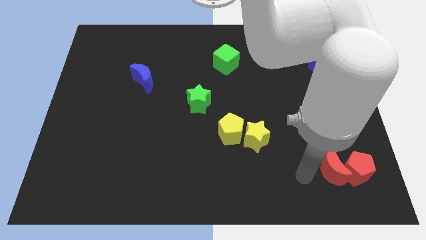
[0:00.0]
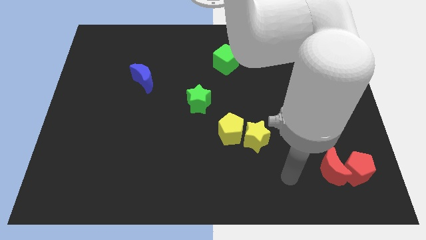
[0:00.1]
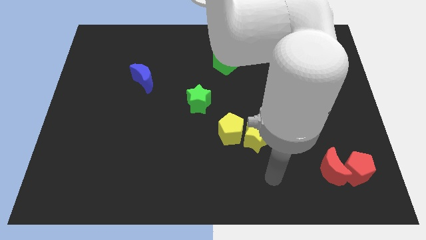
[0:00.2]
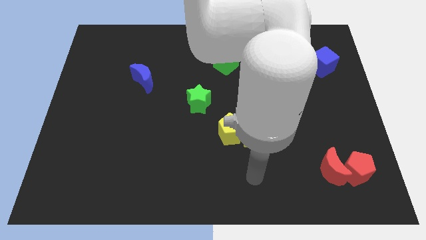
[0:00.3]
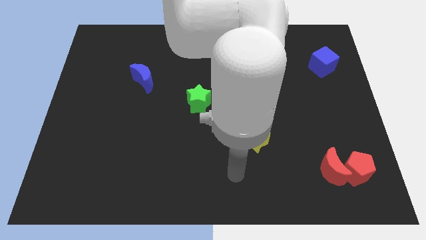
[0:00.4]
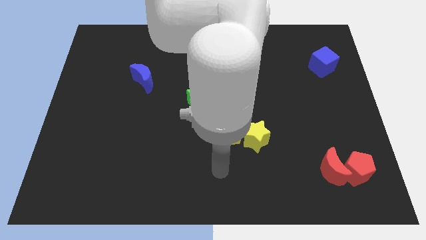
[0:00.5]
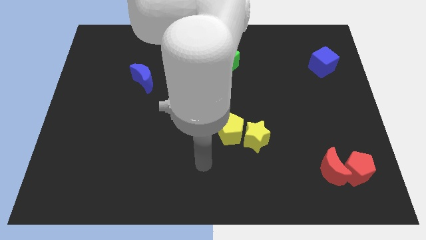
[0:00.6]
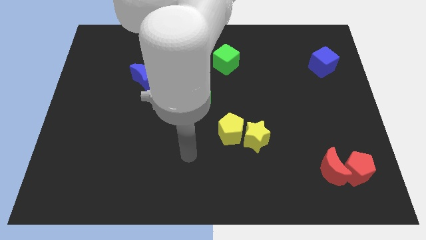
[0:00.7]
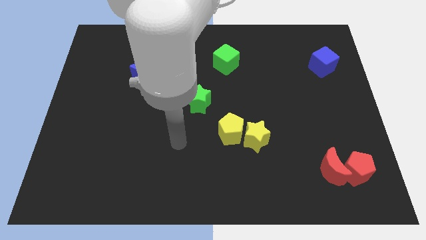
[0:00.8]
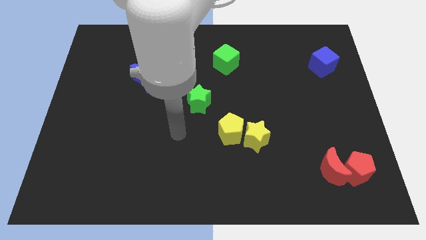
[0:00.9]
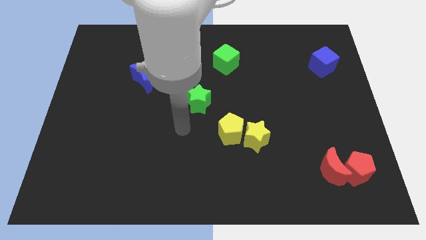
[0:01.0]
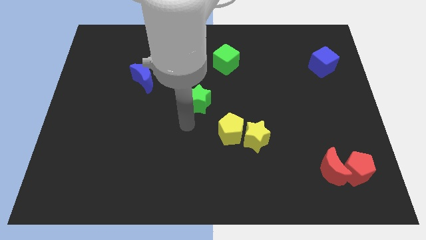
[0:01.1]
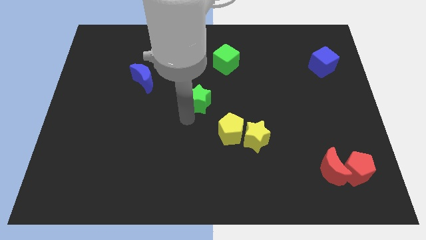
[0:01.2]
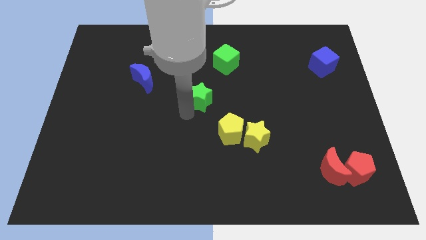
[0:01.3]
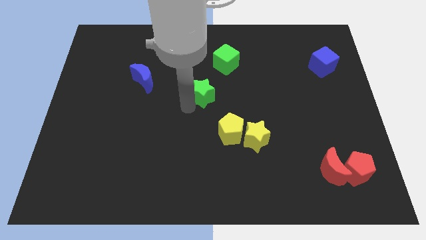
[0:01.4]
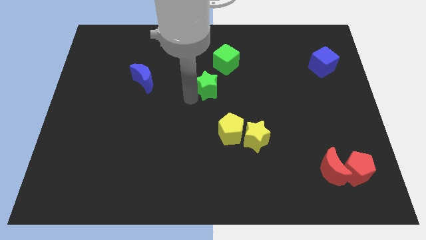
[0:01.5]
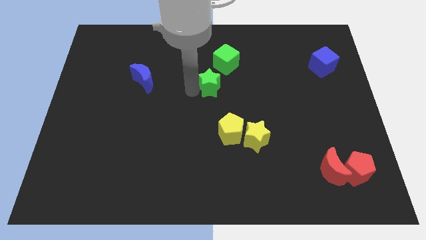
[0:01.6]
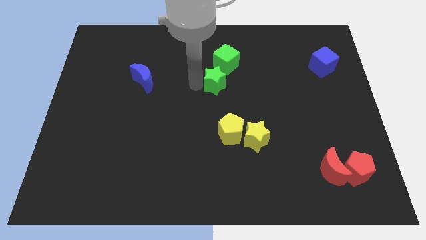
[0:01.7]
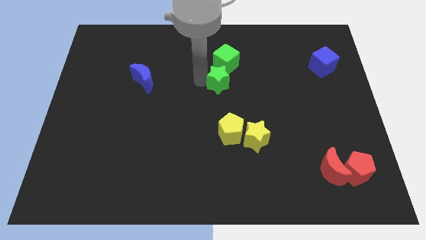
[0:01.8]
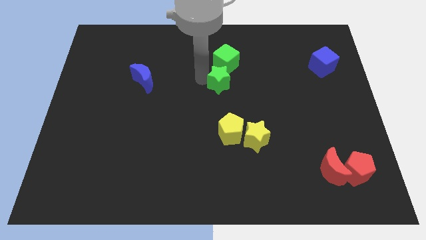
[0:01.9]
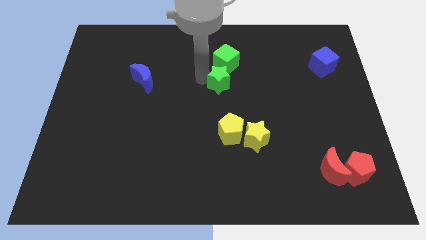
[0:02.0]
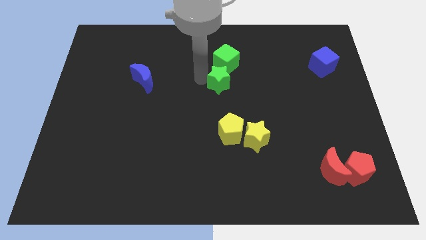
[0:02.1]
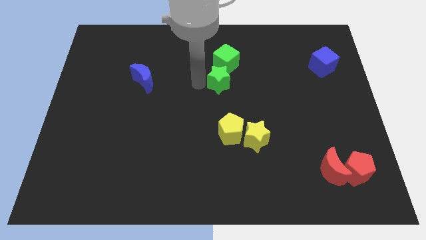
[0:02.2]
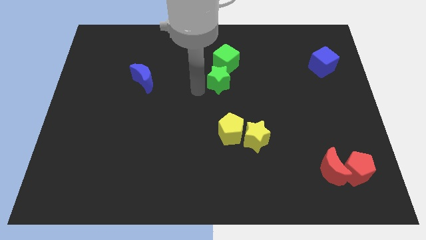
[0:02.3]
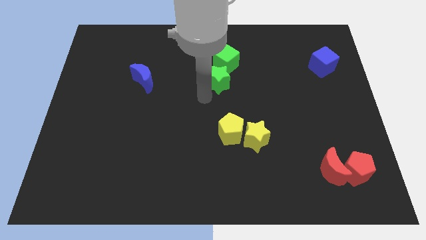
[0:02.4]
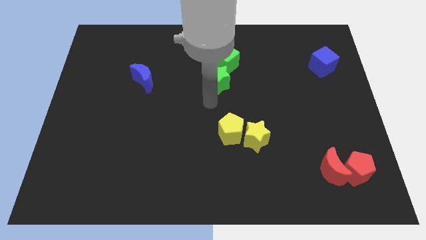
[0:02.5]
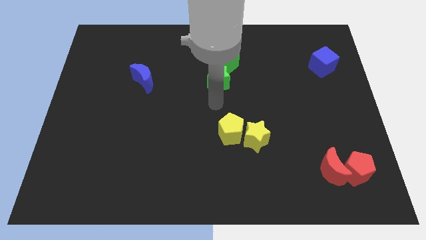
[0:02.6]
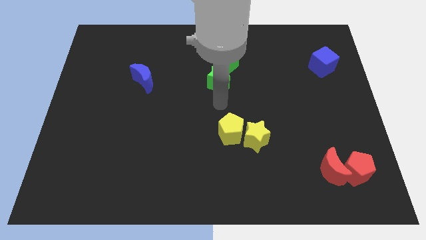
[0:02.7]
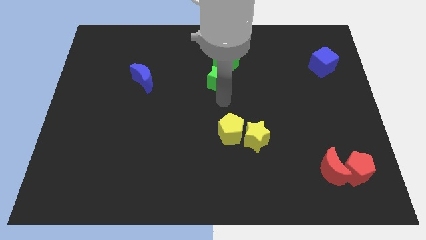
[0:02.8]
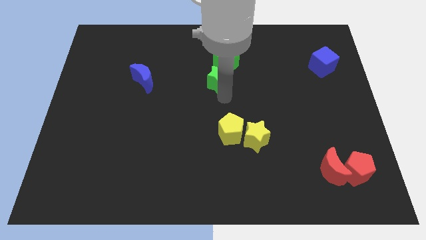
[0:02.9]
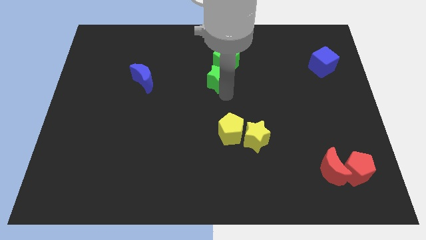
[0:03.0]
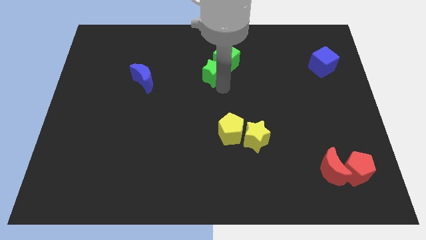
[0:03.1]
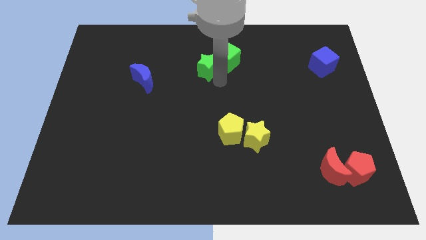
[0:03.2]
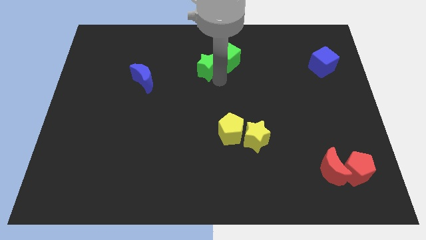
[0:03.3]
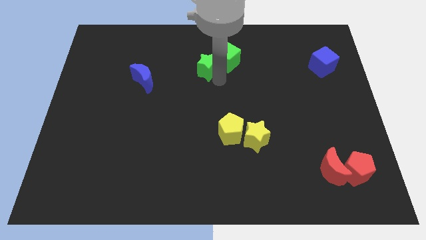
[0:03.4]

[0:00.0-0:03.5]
move the green star into the green cube

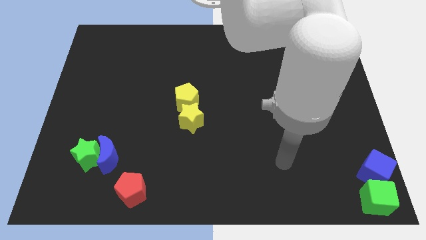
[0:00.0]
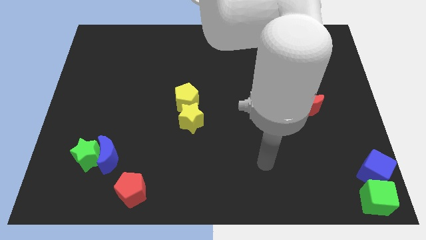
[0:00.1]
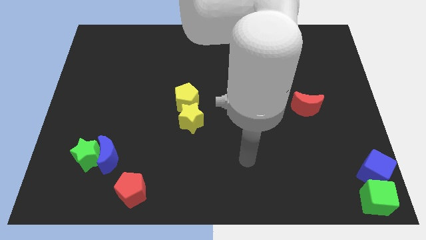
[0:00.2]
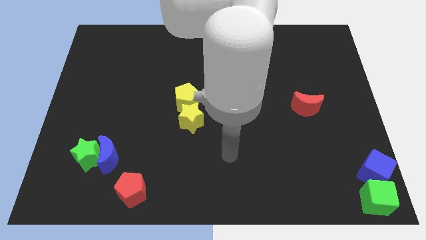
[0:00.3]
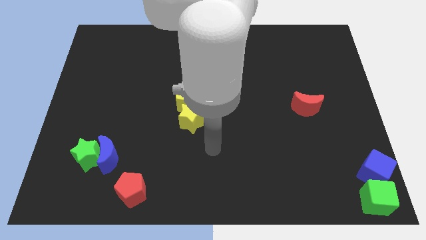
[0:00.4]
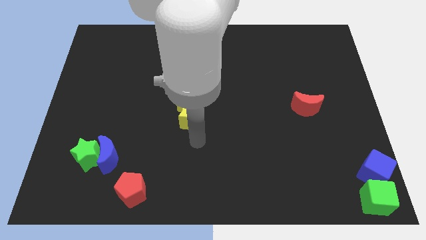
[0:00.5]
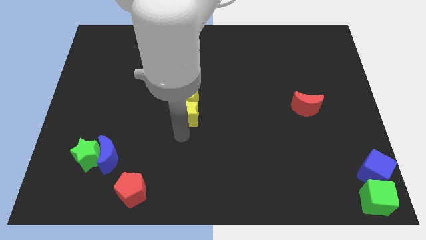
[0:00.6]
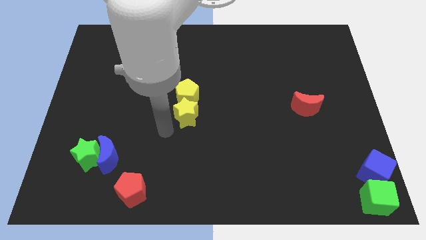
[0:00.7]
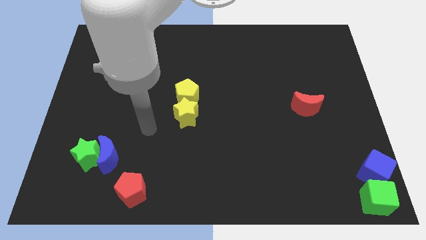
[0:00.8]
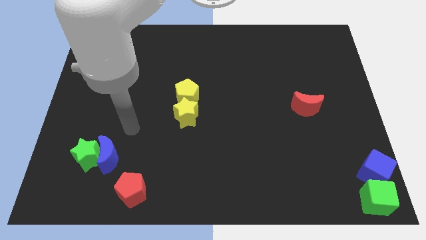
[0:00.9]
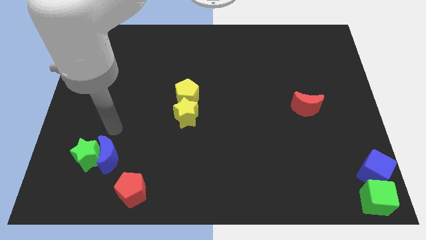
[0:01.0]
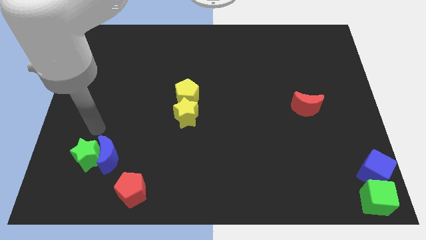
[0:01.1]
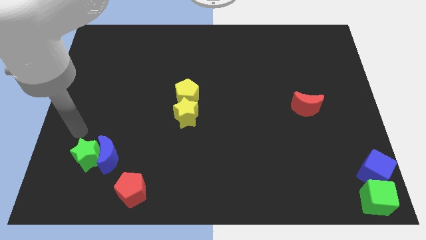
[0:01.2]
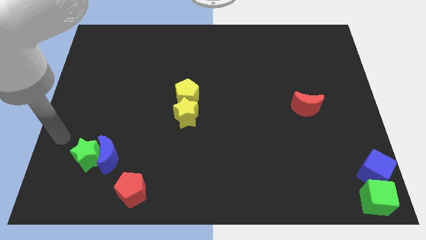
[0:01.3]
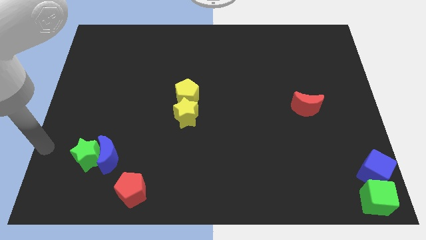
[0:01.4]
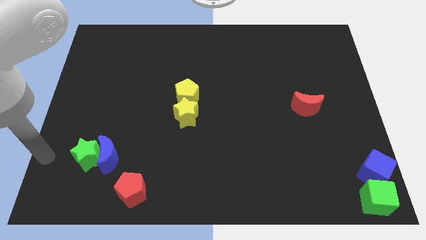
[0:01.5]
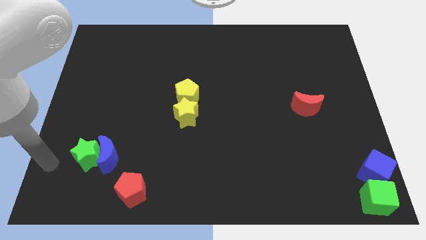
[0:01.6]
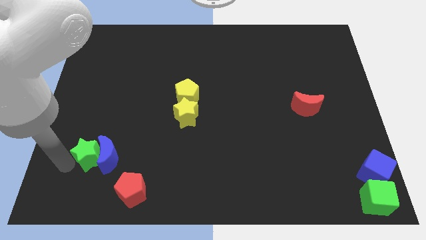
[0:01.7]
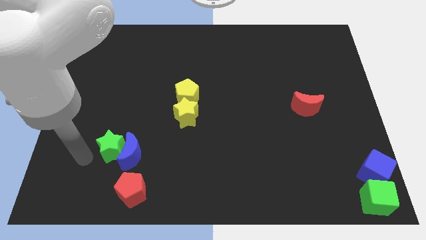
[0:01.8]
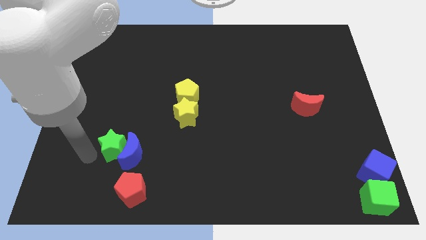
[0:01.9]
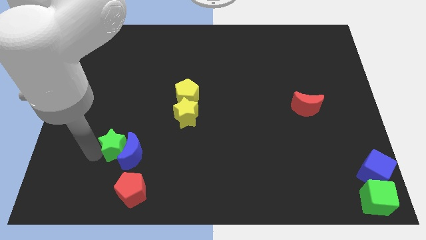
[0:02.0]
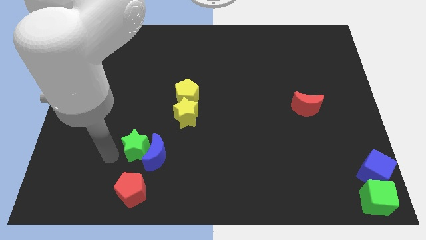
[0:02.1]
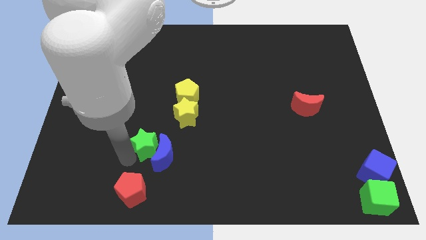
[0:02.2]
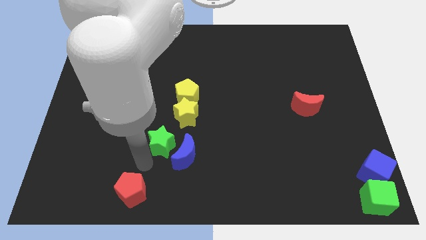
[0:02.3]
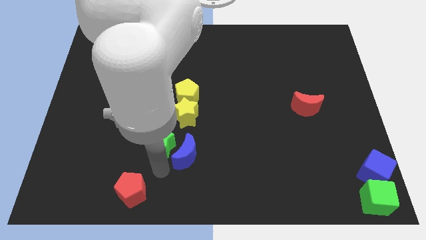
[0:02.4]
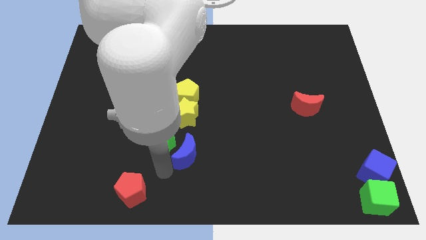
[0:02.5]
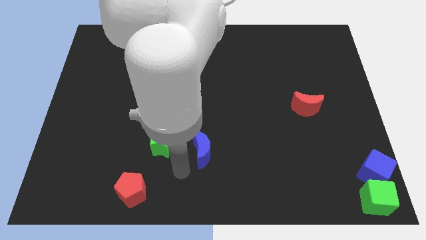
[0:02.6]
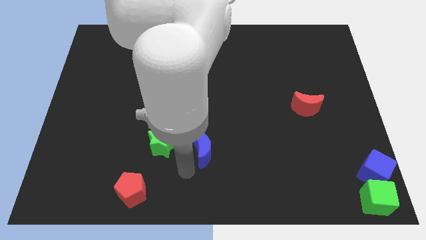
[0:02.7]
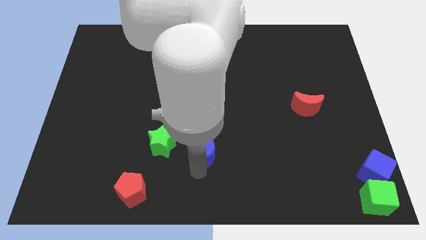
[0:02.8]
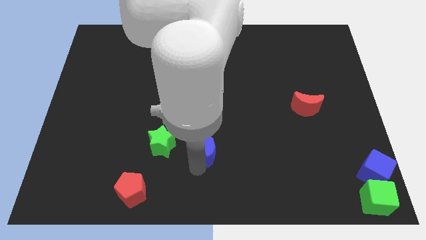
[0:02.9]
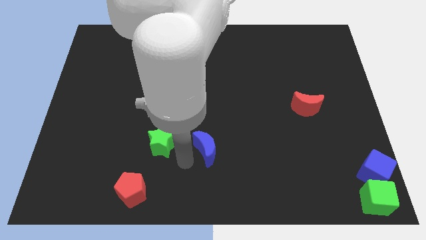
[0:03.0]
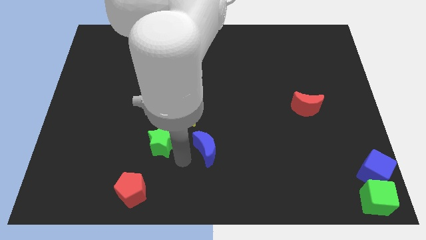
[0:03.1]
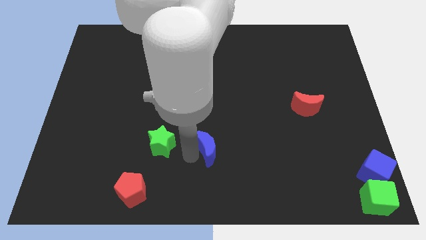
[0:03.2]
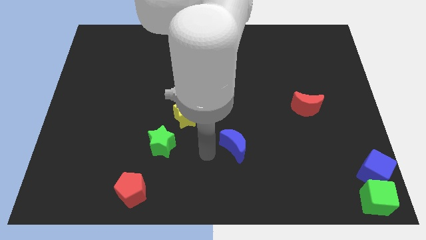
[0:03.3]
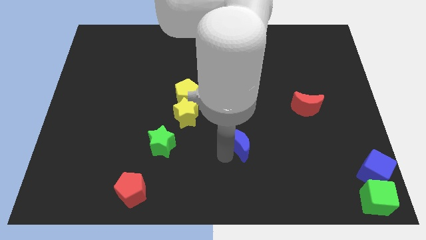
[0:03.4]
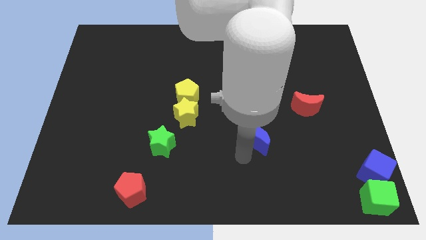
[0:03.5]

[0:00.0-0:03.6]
separate green star and the blue moon

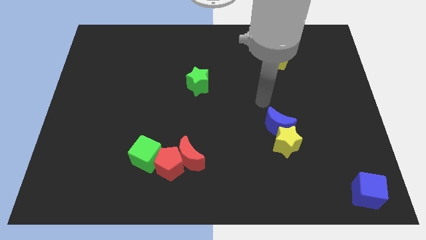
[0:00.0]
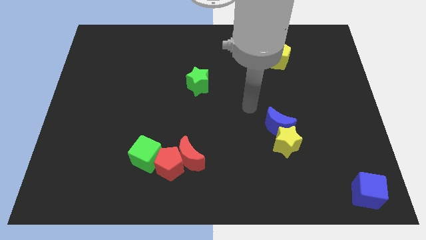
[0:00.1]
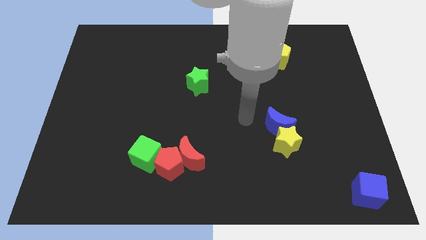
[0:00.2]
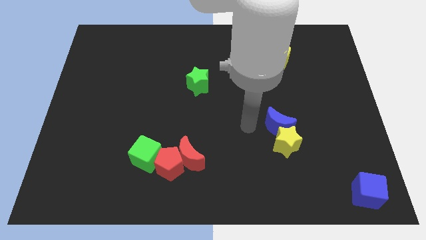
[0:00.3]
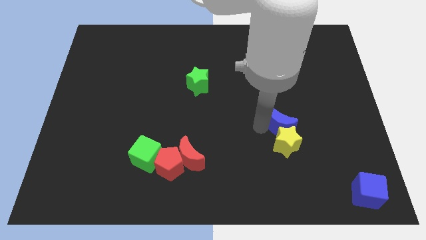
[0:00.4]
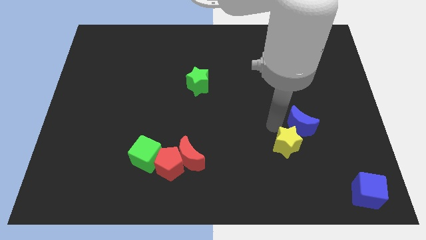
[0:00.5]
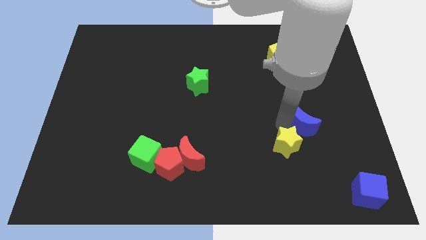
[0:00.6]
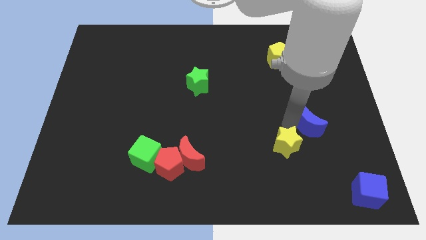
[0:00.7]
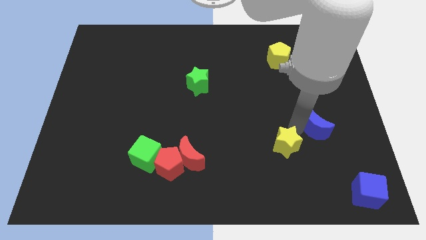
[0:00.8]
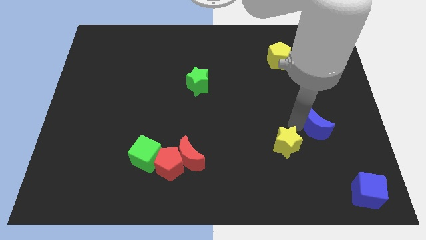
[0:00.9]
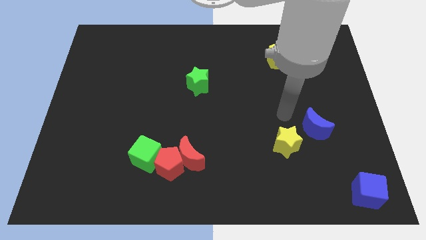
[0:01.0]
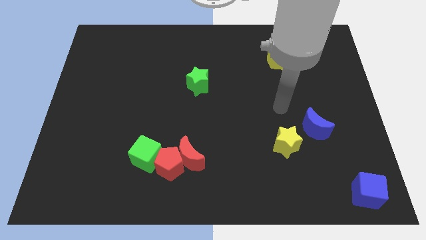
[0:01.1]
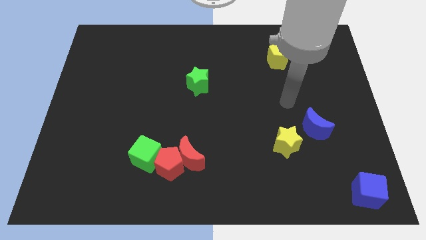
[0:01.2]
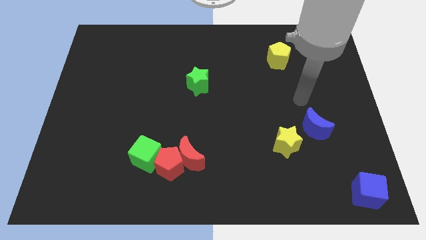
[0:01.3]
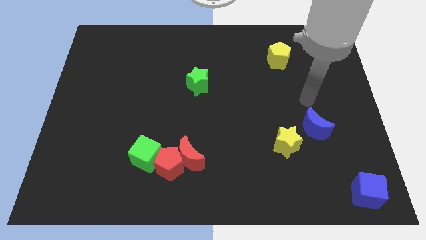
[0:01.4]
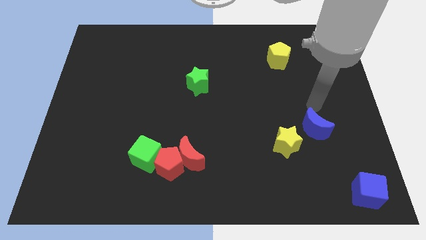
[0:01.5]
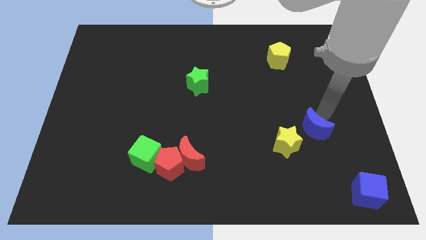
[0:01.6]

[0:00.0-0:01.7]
separate the blue moon from the yellow star
